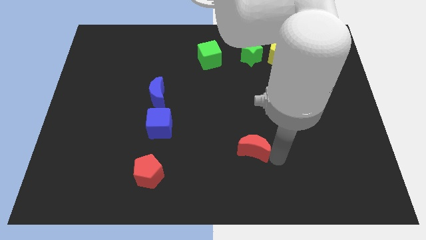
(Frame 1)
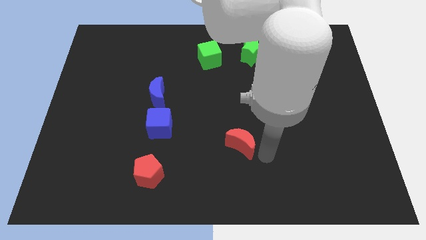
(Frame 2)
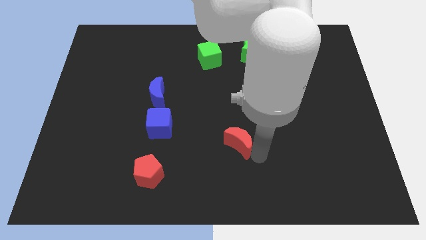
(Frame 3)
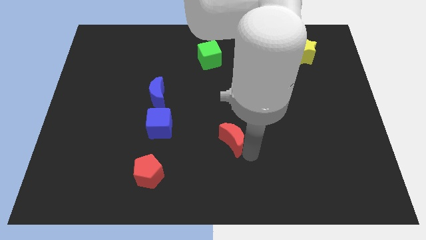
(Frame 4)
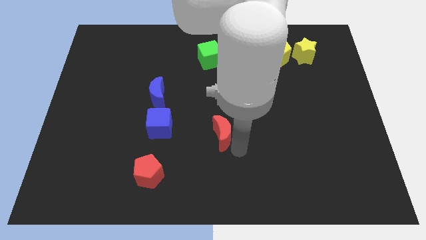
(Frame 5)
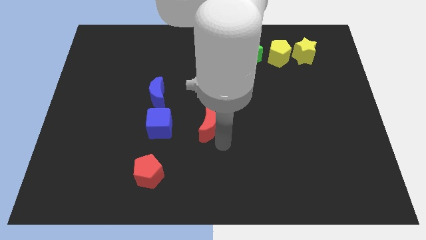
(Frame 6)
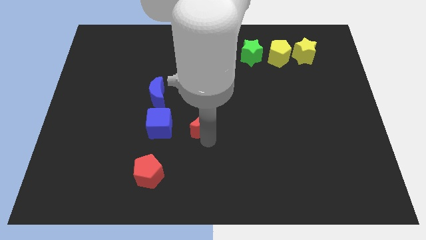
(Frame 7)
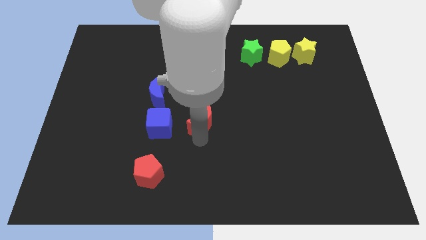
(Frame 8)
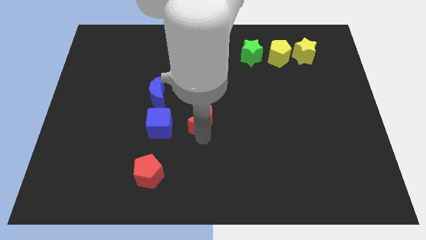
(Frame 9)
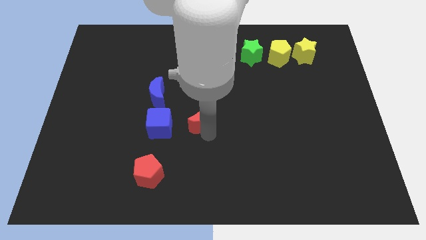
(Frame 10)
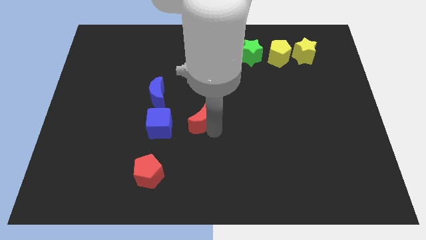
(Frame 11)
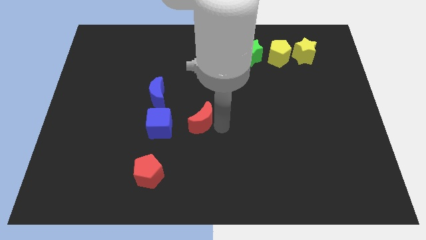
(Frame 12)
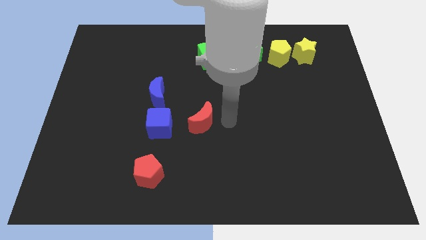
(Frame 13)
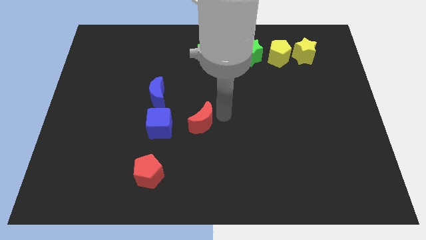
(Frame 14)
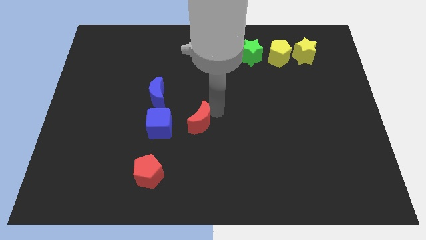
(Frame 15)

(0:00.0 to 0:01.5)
place red moon parallel to blue cube

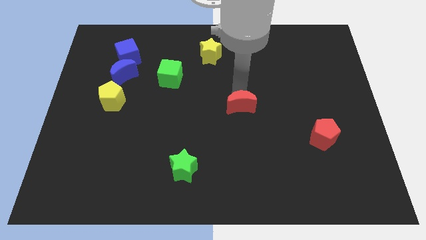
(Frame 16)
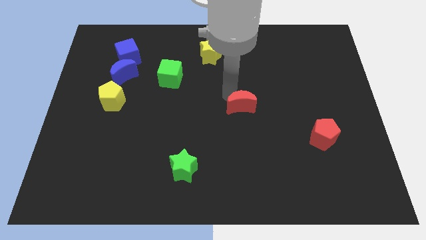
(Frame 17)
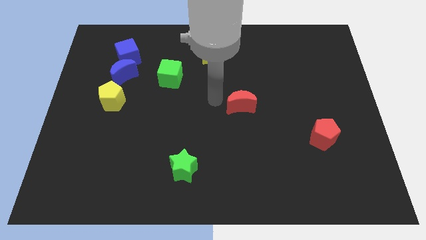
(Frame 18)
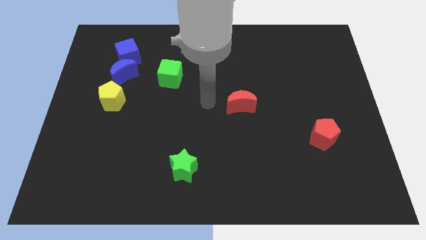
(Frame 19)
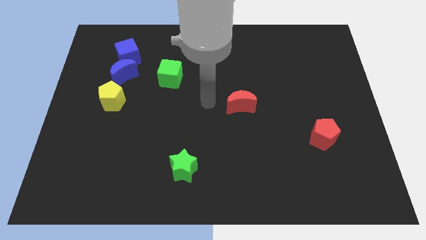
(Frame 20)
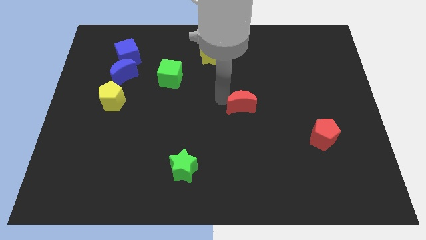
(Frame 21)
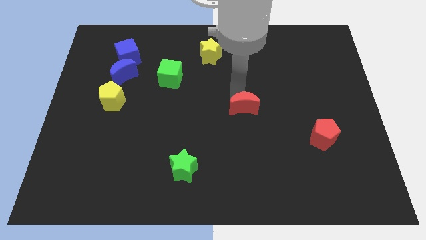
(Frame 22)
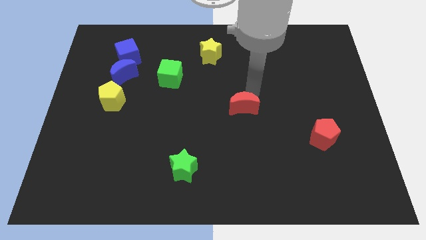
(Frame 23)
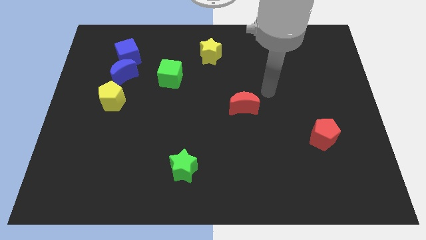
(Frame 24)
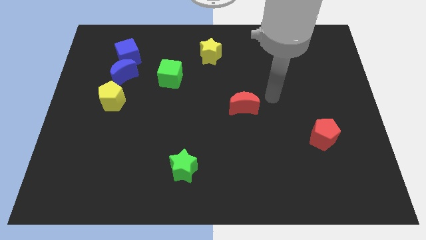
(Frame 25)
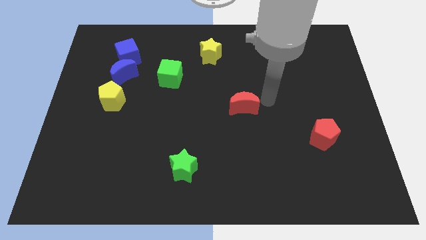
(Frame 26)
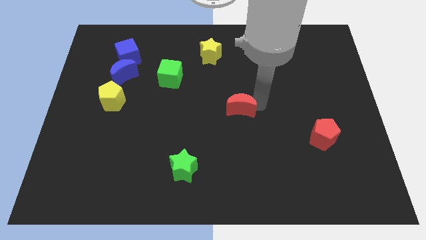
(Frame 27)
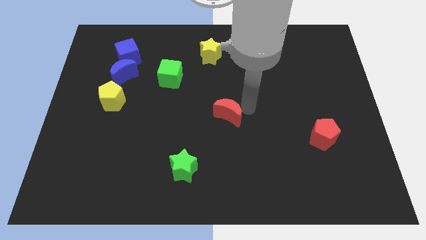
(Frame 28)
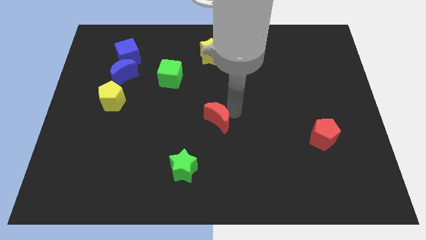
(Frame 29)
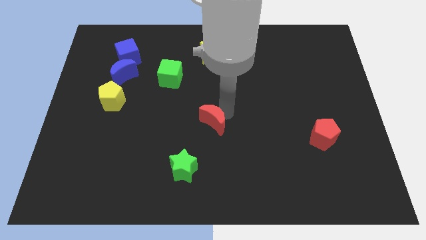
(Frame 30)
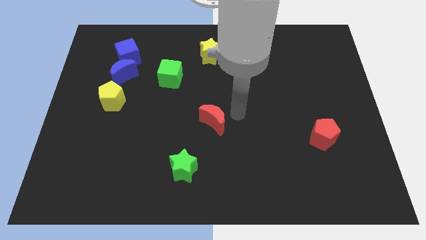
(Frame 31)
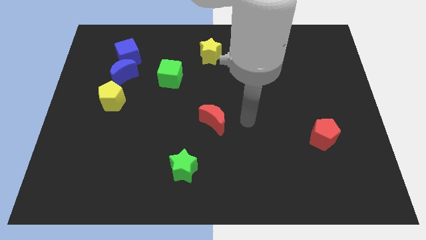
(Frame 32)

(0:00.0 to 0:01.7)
drag the red crescent diagonally on the top right side of the green star

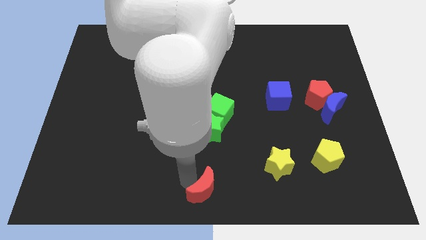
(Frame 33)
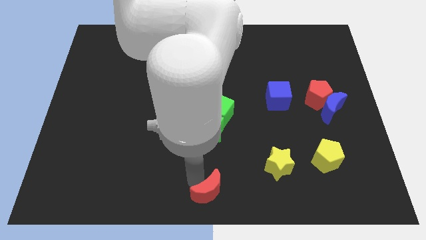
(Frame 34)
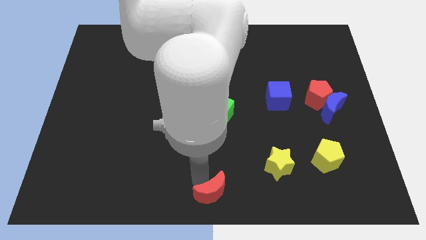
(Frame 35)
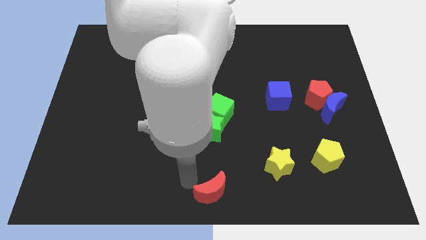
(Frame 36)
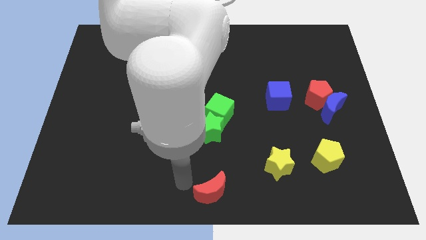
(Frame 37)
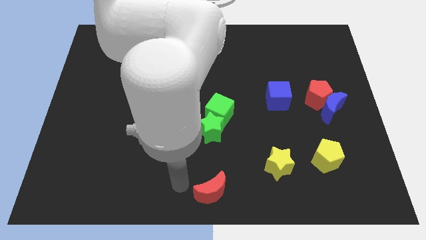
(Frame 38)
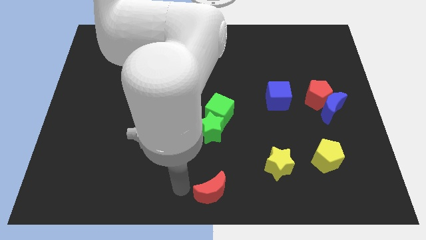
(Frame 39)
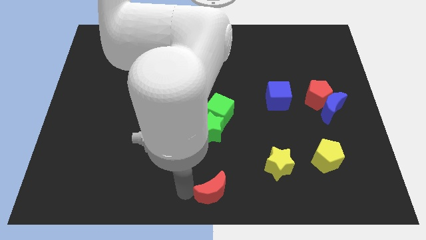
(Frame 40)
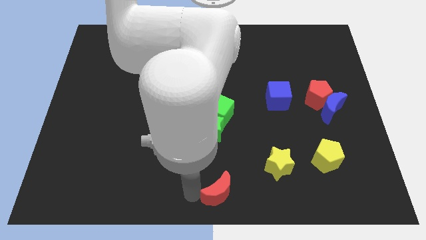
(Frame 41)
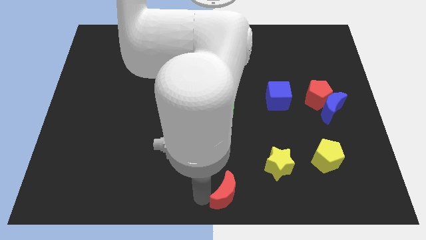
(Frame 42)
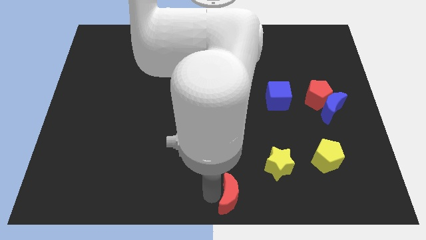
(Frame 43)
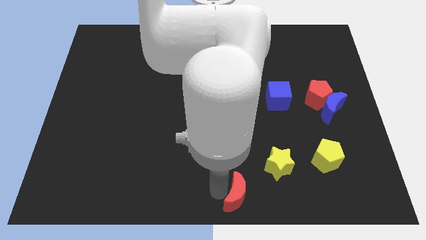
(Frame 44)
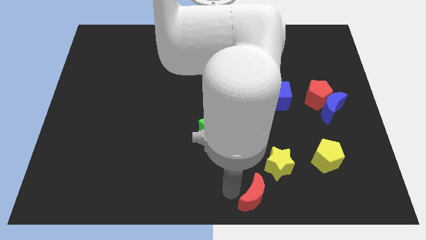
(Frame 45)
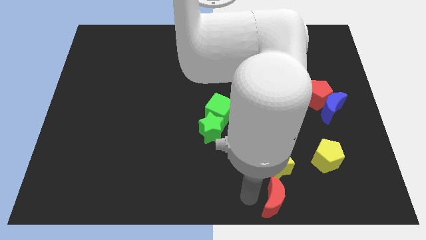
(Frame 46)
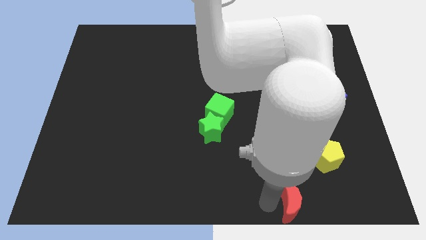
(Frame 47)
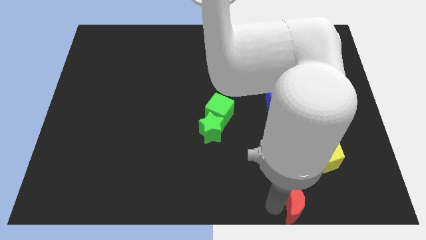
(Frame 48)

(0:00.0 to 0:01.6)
move the red crescent to the right of the board

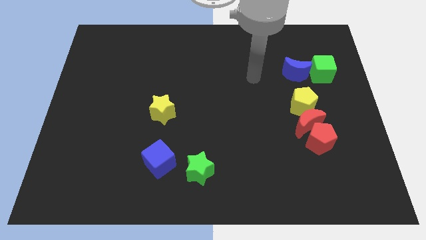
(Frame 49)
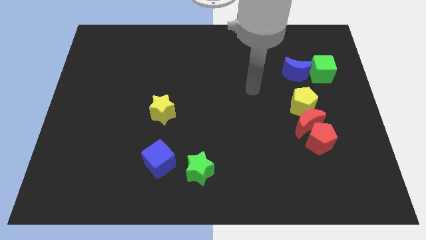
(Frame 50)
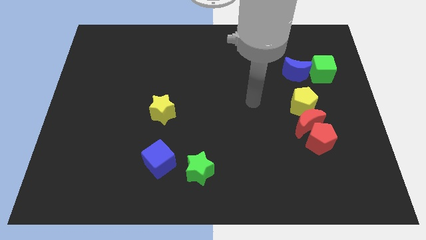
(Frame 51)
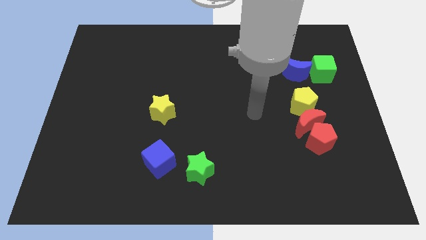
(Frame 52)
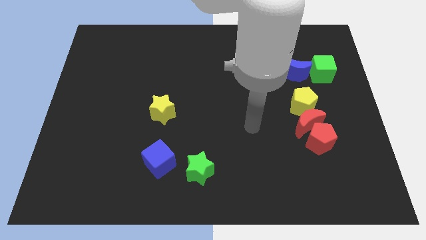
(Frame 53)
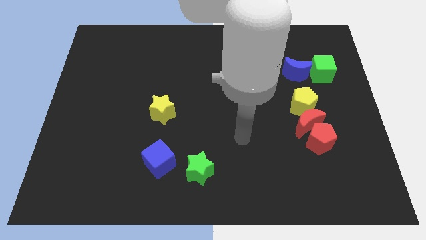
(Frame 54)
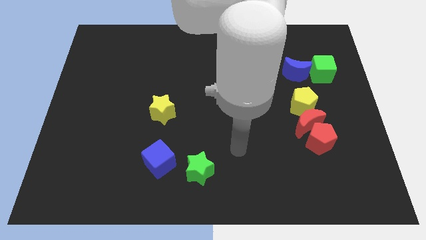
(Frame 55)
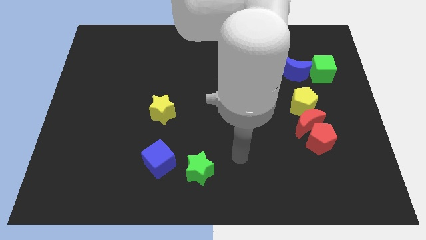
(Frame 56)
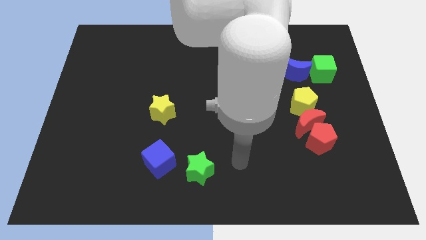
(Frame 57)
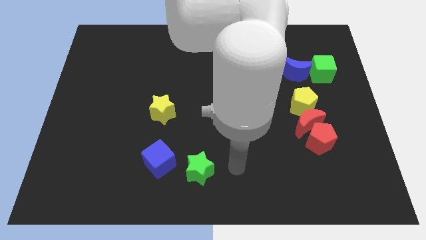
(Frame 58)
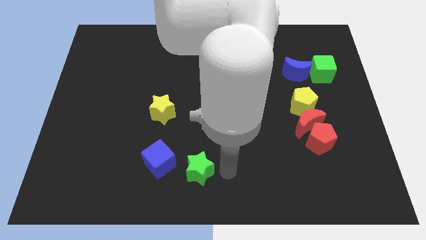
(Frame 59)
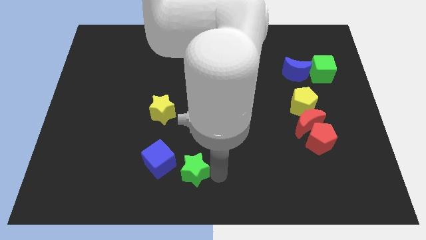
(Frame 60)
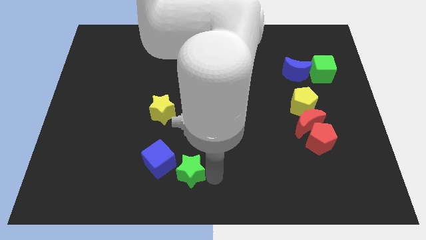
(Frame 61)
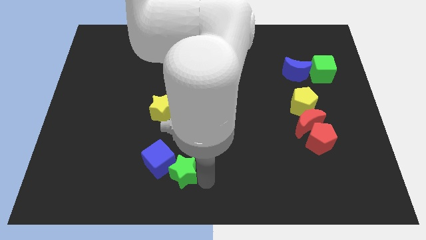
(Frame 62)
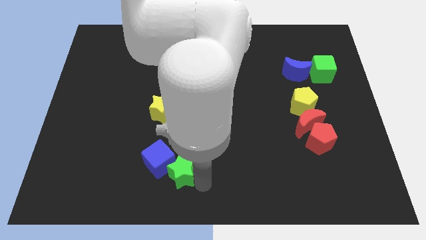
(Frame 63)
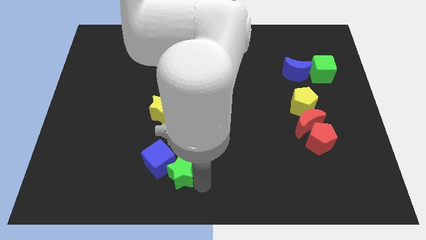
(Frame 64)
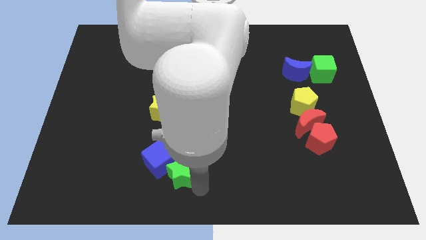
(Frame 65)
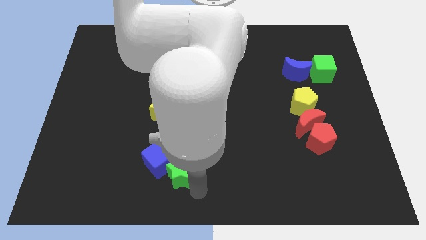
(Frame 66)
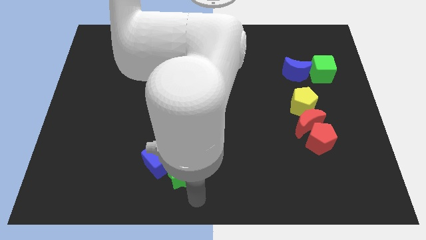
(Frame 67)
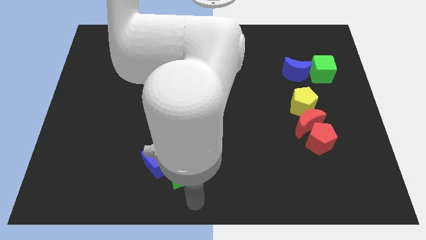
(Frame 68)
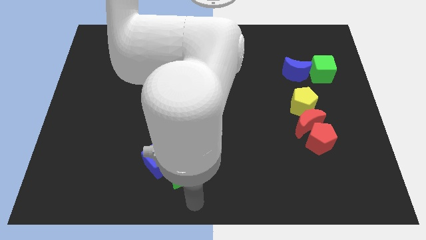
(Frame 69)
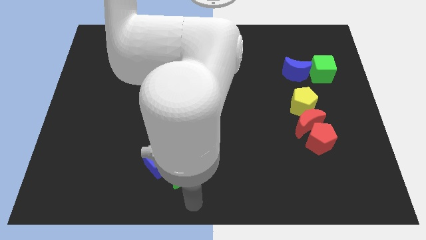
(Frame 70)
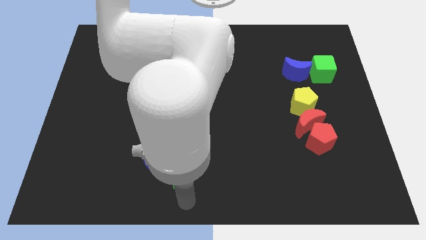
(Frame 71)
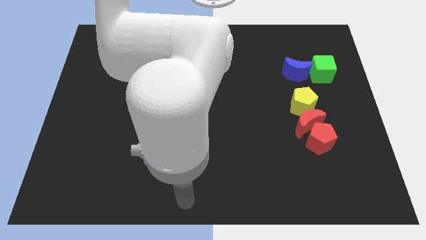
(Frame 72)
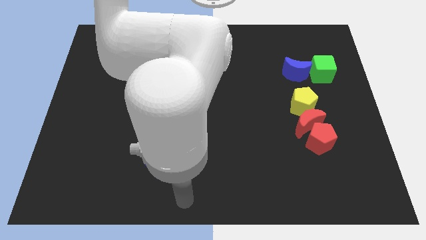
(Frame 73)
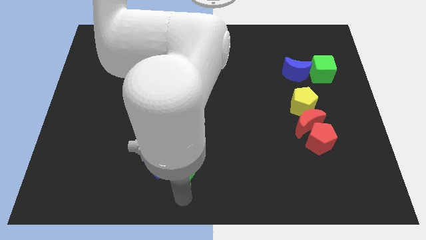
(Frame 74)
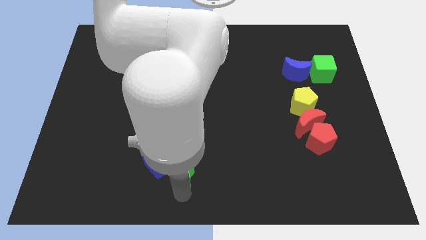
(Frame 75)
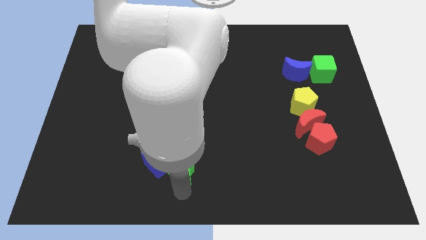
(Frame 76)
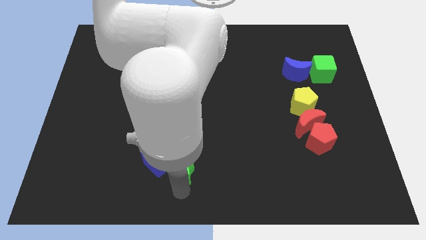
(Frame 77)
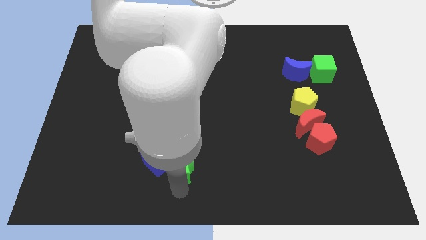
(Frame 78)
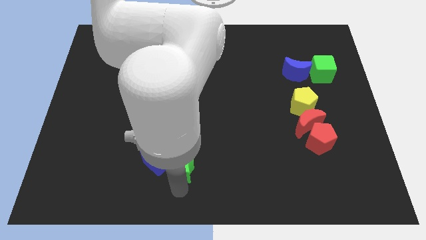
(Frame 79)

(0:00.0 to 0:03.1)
move the green star close to the blue cube

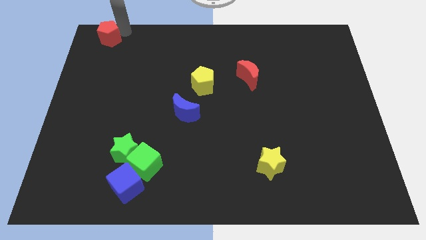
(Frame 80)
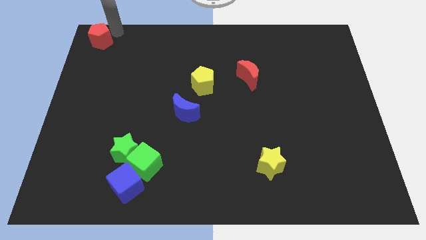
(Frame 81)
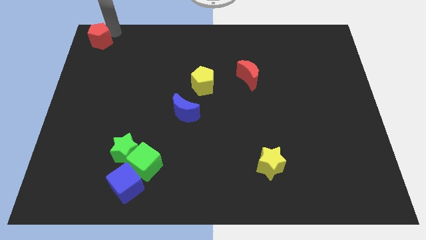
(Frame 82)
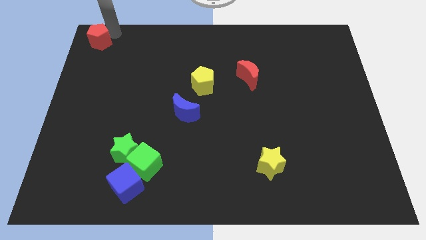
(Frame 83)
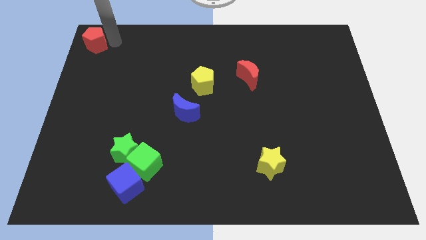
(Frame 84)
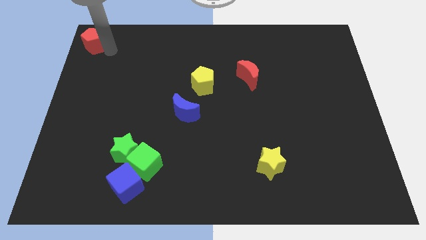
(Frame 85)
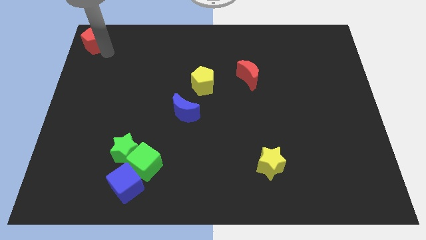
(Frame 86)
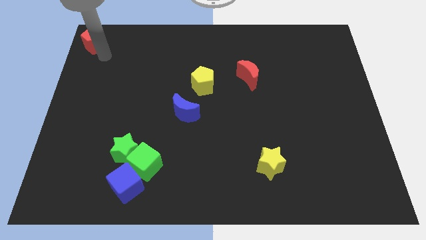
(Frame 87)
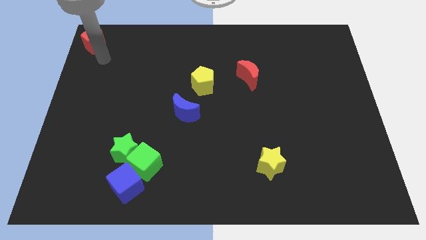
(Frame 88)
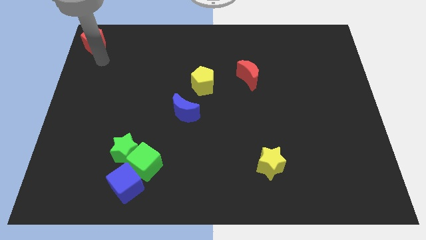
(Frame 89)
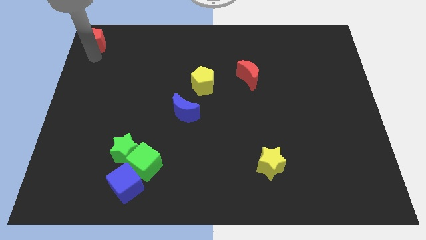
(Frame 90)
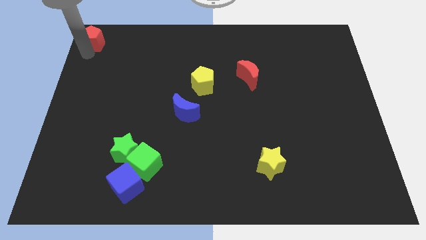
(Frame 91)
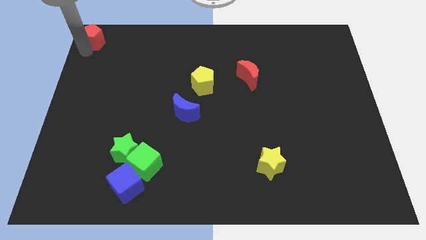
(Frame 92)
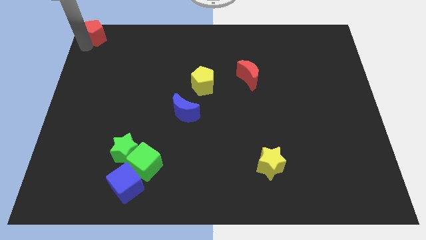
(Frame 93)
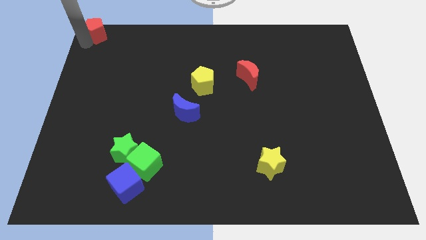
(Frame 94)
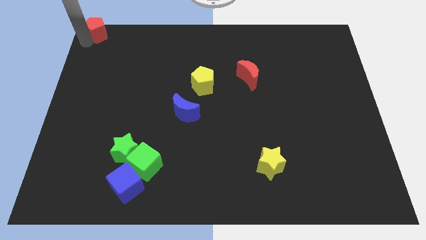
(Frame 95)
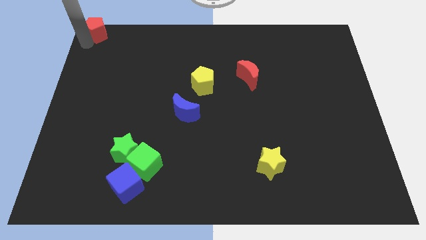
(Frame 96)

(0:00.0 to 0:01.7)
move the red pentagon to the top left corner
